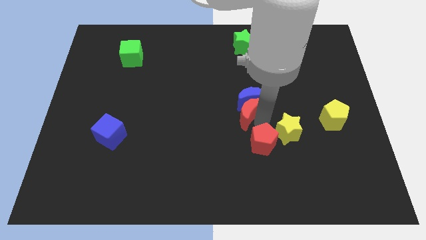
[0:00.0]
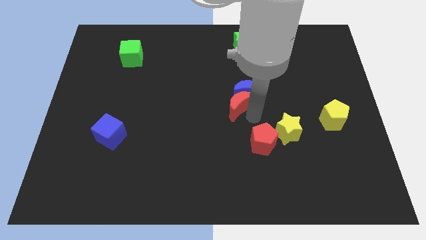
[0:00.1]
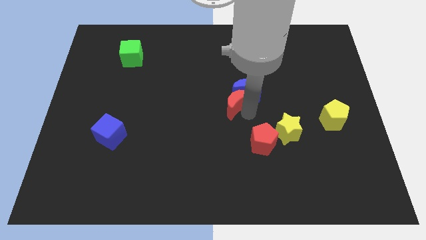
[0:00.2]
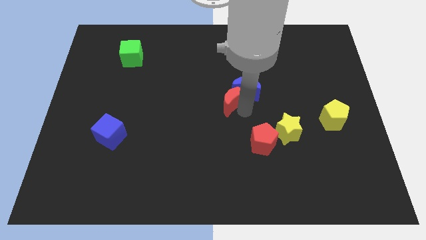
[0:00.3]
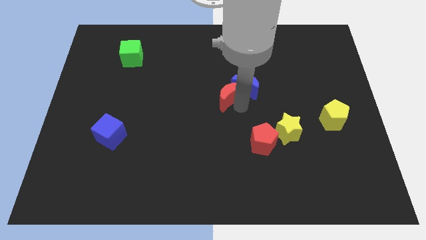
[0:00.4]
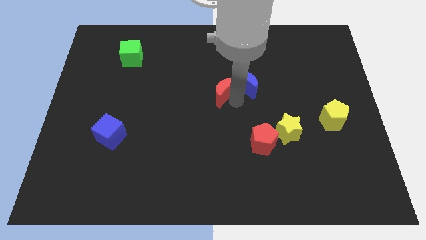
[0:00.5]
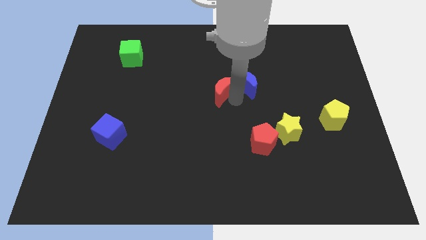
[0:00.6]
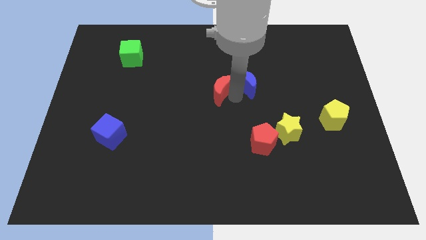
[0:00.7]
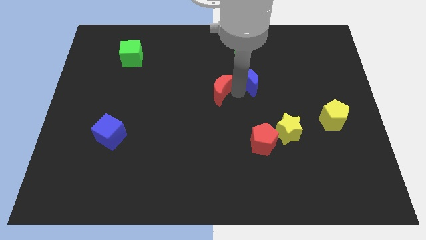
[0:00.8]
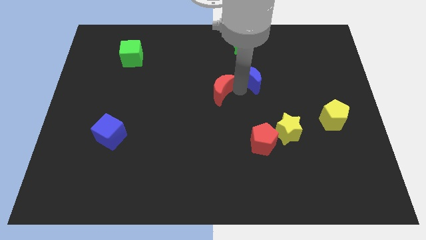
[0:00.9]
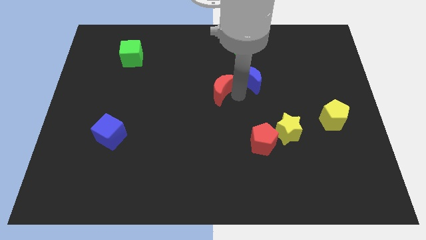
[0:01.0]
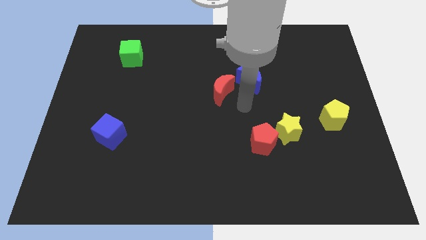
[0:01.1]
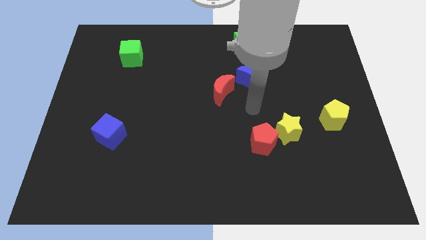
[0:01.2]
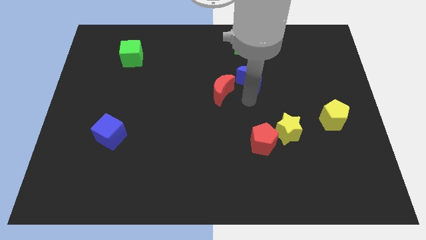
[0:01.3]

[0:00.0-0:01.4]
push the red moon slightly upwards

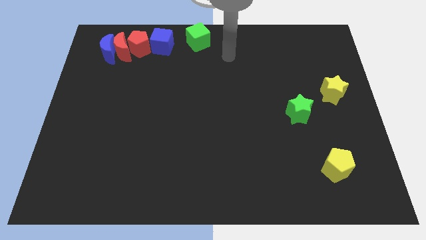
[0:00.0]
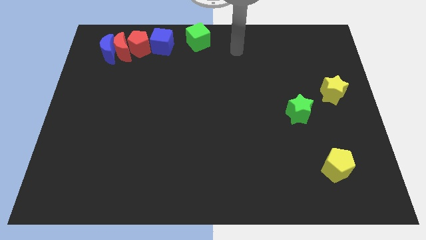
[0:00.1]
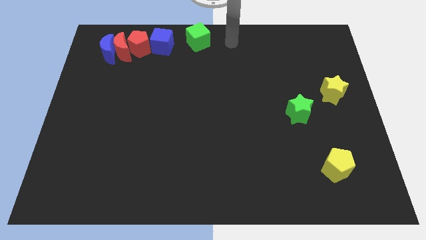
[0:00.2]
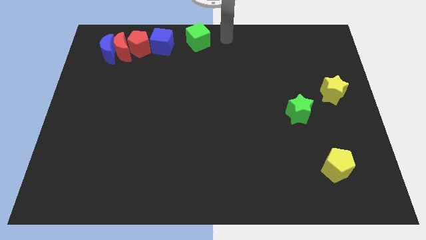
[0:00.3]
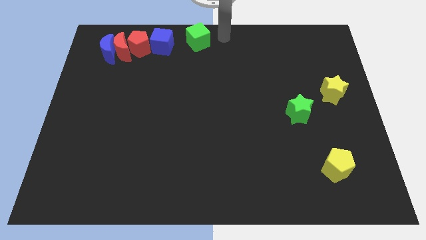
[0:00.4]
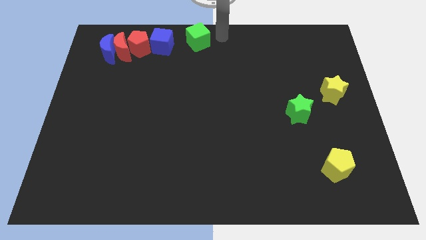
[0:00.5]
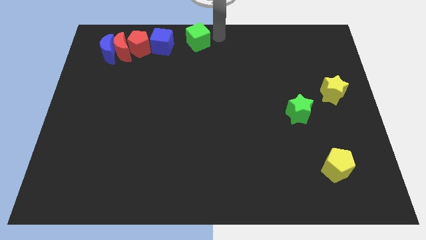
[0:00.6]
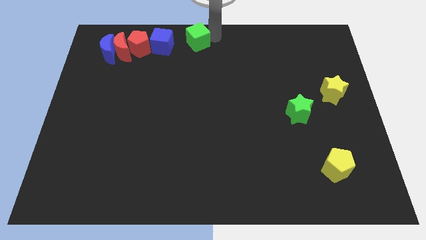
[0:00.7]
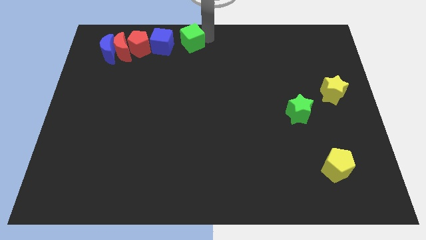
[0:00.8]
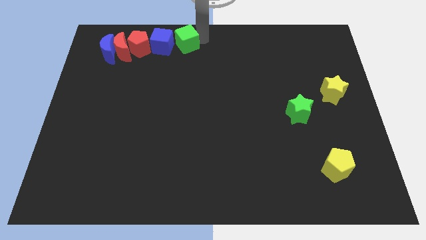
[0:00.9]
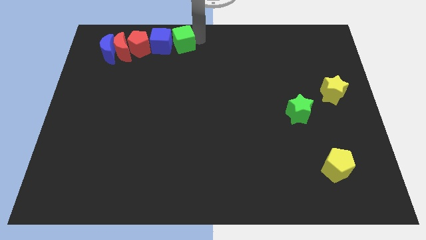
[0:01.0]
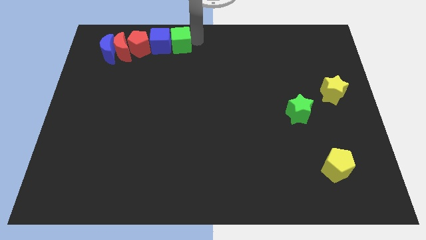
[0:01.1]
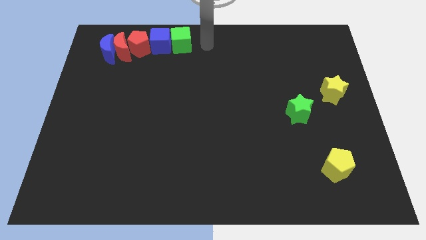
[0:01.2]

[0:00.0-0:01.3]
push green cube in to blue cube

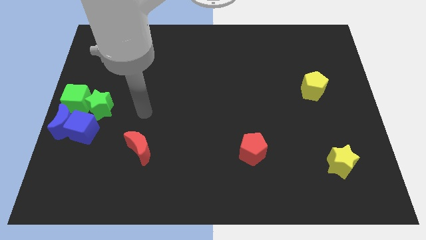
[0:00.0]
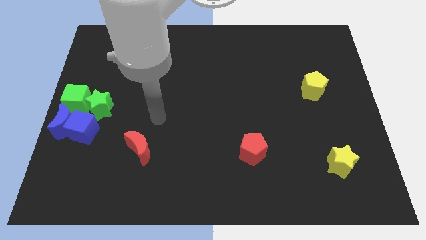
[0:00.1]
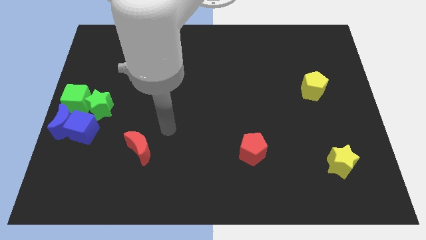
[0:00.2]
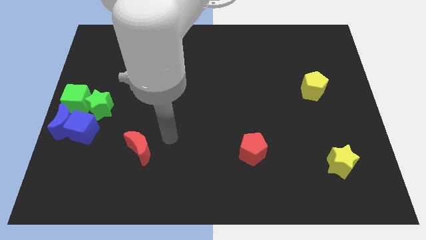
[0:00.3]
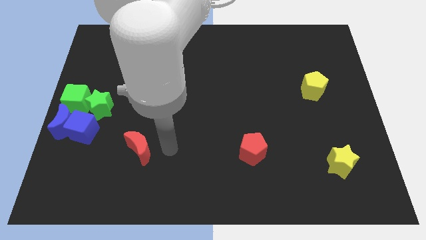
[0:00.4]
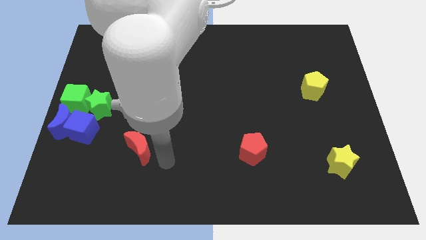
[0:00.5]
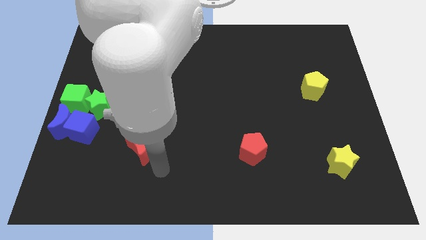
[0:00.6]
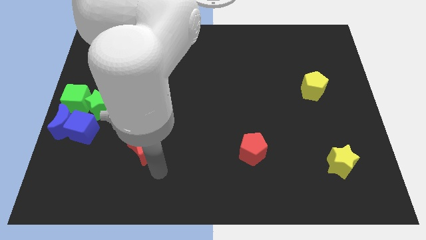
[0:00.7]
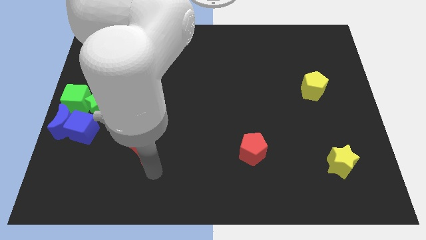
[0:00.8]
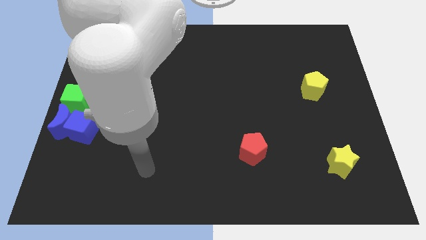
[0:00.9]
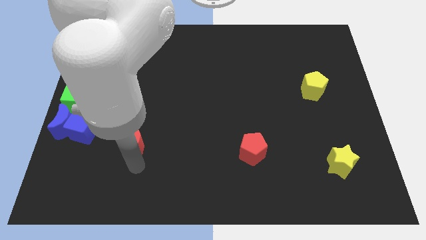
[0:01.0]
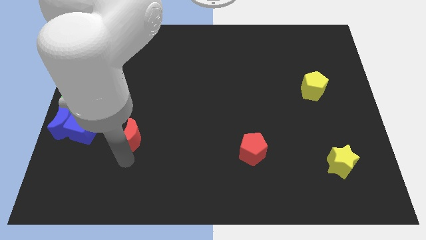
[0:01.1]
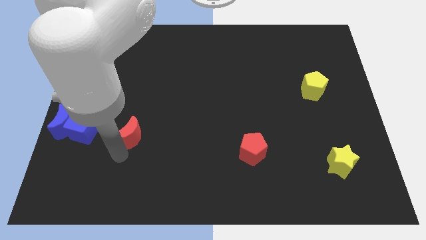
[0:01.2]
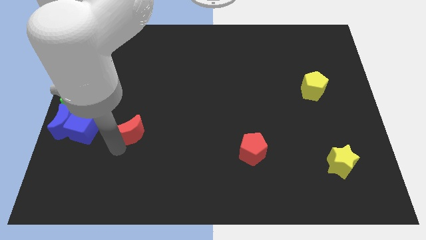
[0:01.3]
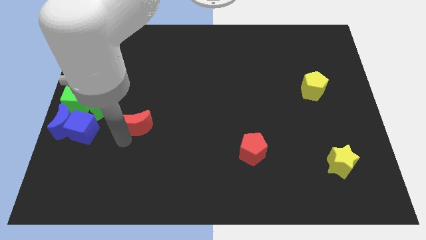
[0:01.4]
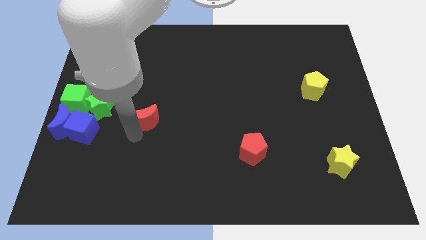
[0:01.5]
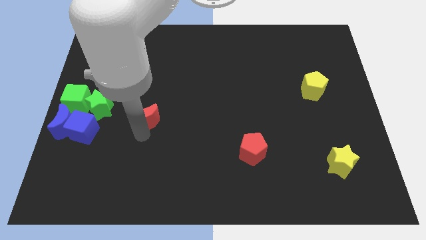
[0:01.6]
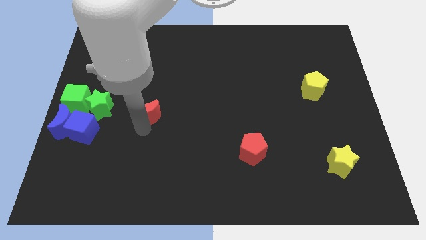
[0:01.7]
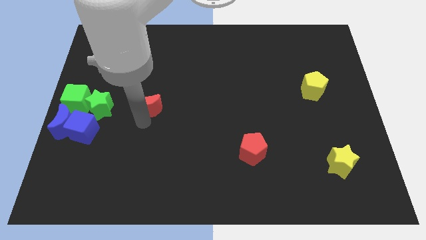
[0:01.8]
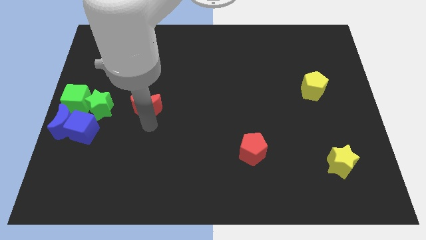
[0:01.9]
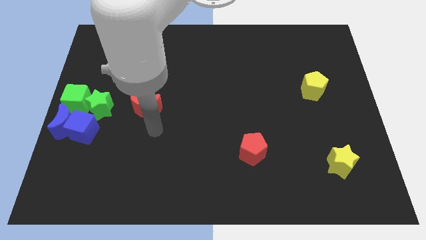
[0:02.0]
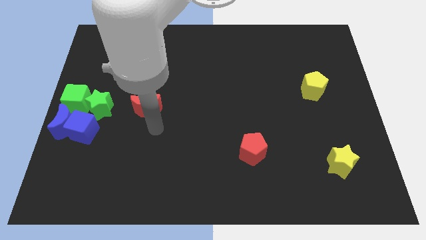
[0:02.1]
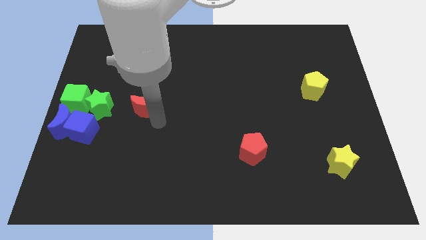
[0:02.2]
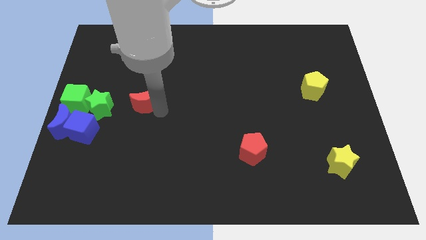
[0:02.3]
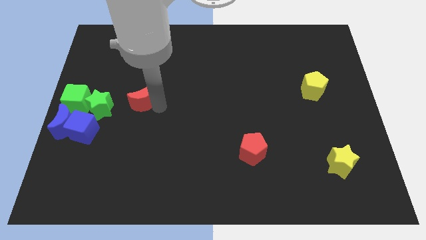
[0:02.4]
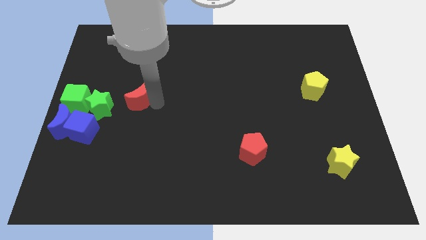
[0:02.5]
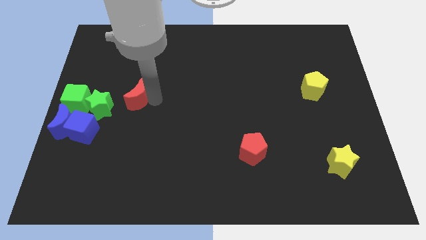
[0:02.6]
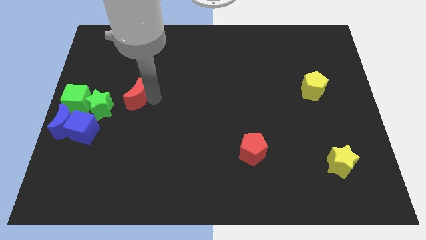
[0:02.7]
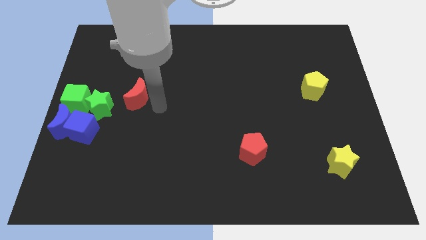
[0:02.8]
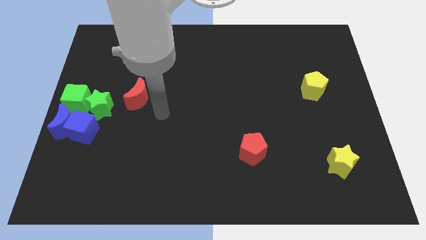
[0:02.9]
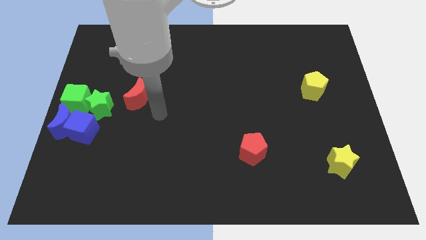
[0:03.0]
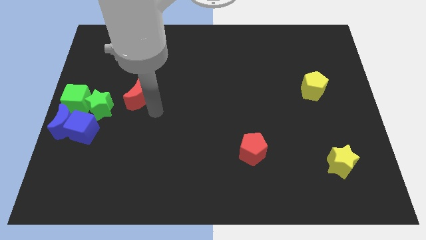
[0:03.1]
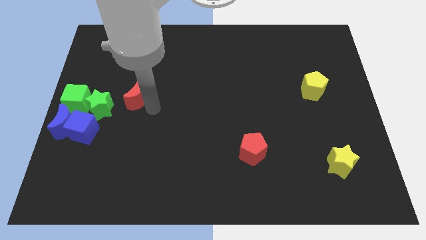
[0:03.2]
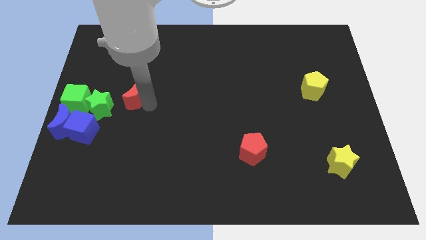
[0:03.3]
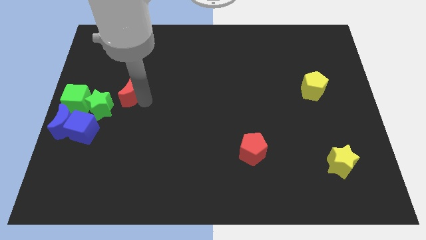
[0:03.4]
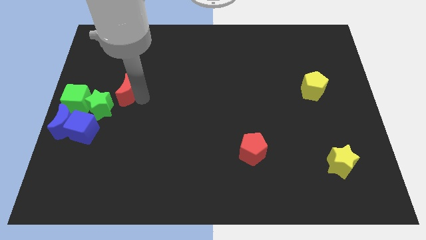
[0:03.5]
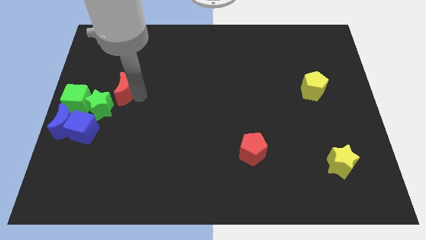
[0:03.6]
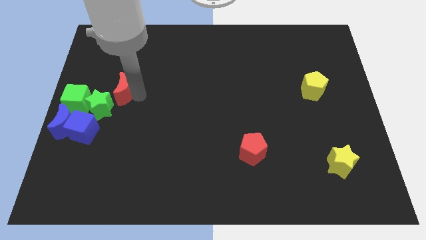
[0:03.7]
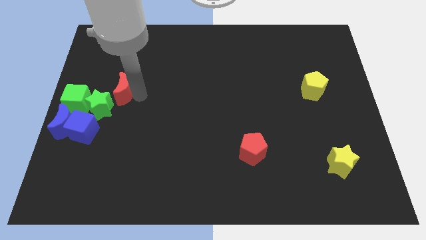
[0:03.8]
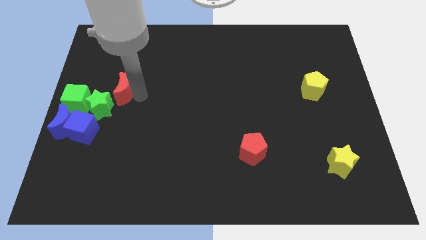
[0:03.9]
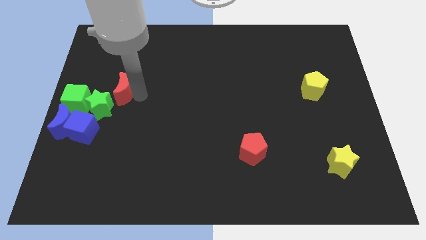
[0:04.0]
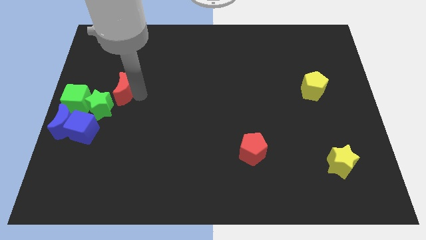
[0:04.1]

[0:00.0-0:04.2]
move the red crescent diagonally to the top right of the green star

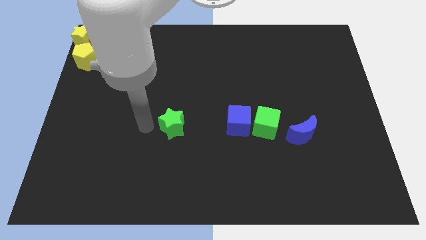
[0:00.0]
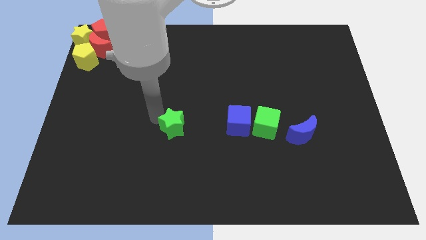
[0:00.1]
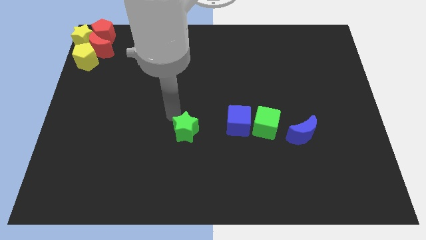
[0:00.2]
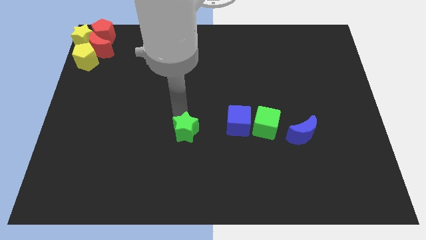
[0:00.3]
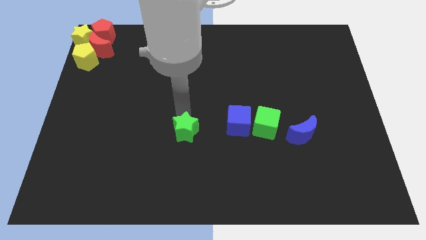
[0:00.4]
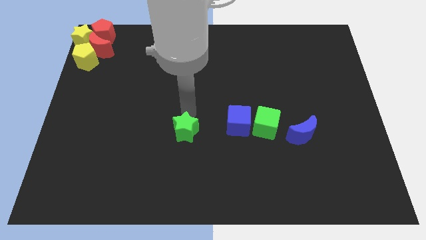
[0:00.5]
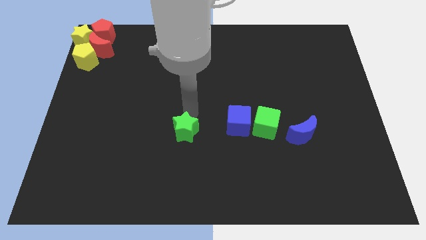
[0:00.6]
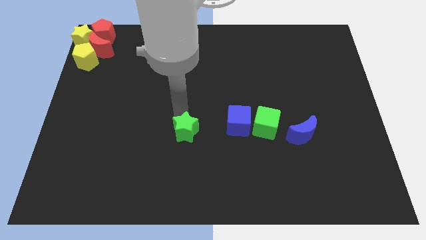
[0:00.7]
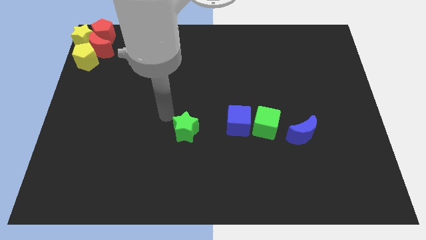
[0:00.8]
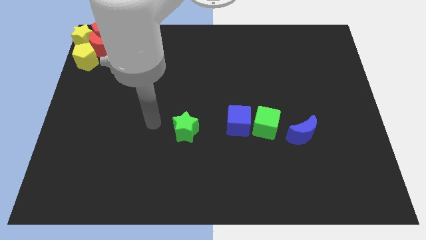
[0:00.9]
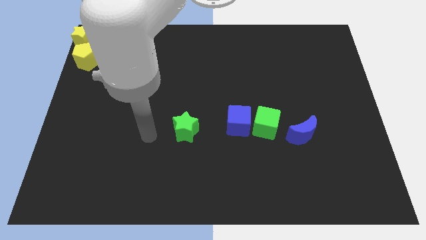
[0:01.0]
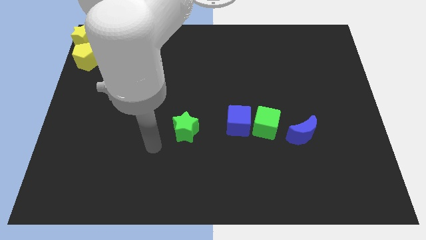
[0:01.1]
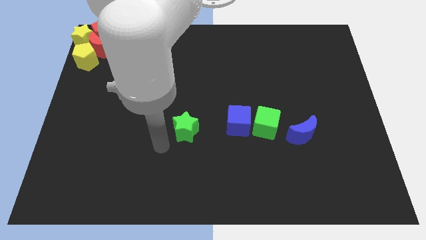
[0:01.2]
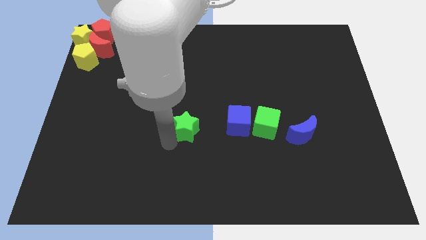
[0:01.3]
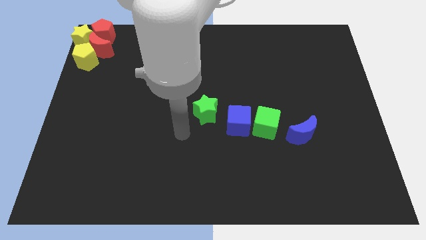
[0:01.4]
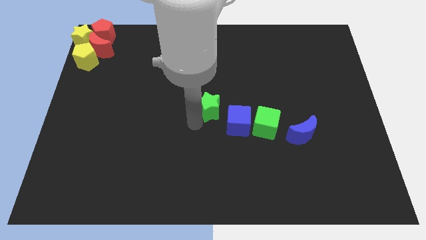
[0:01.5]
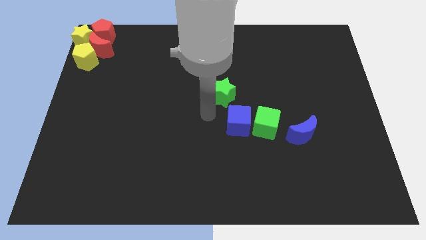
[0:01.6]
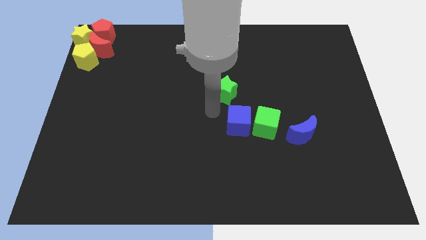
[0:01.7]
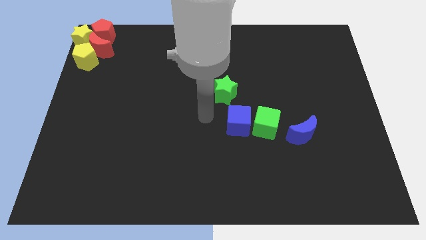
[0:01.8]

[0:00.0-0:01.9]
place the green star diagonally top left to the blue cube
